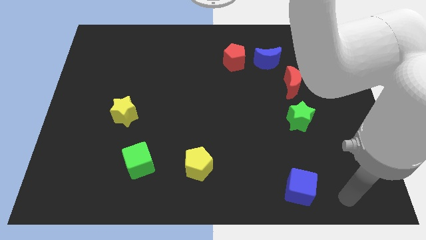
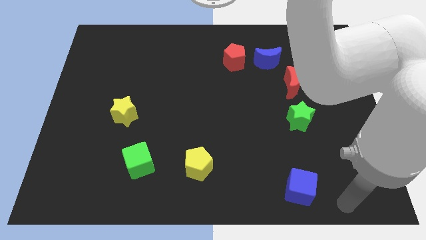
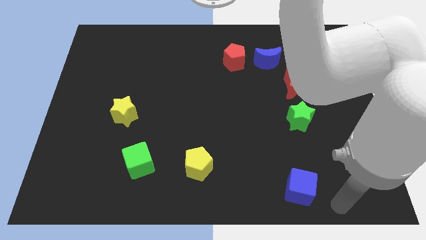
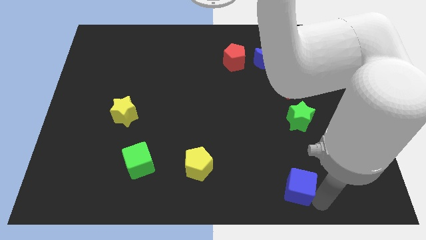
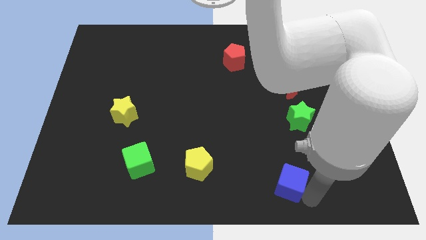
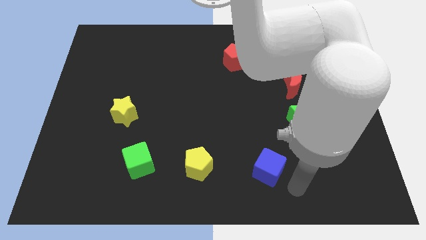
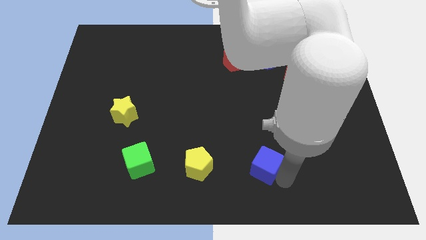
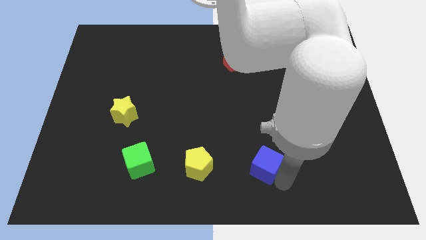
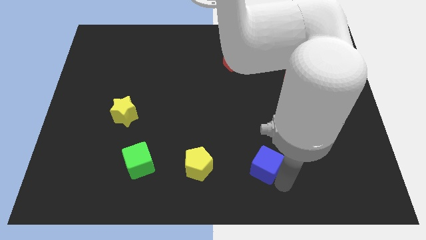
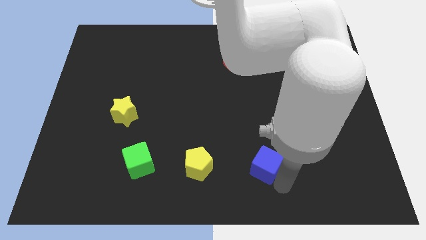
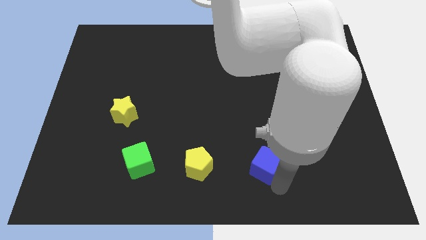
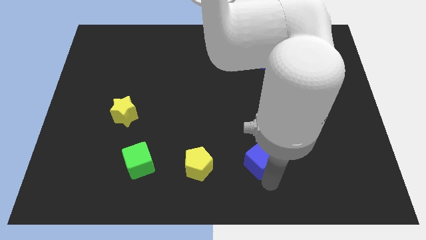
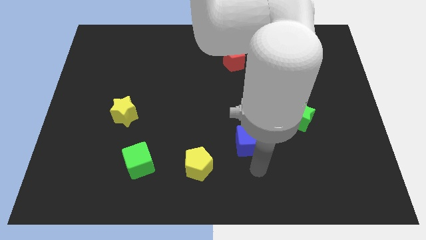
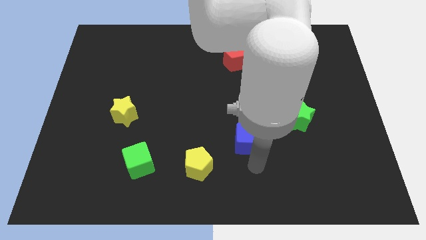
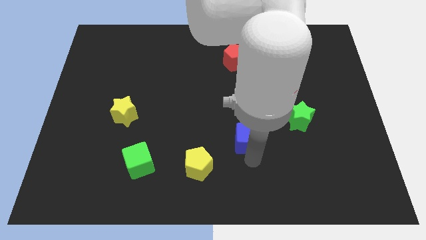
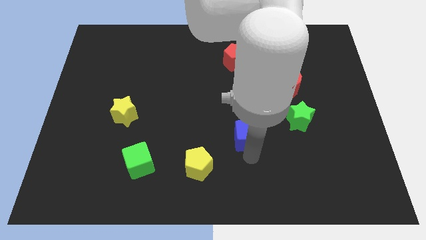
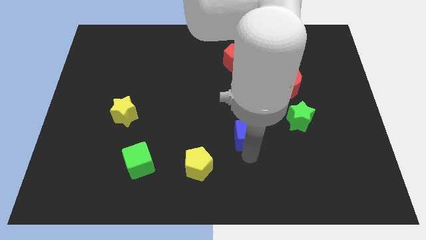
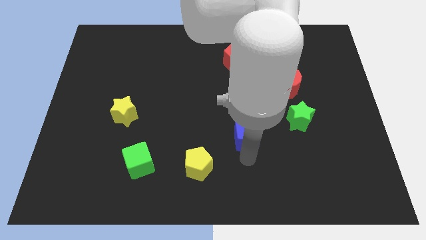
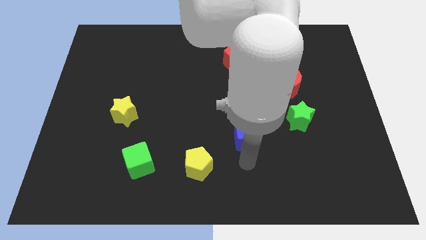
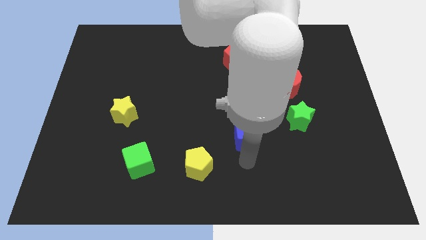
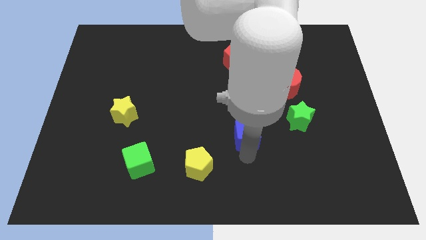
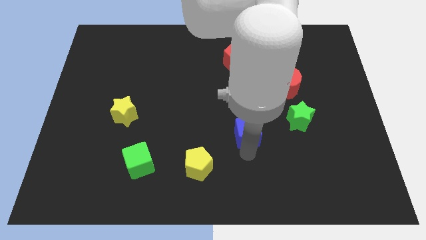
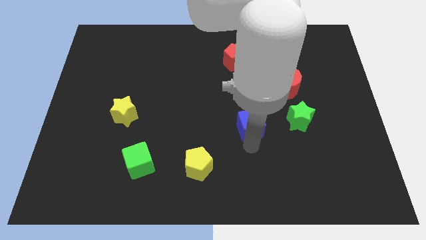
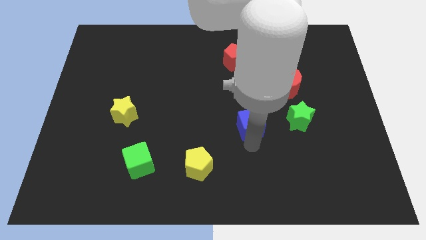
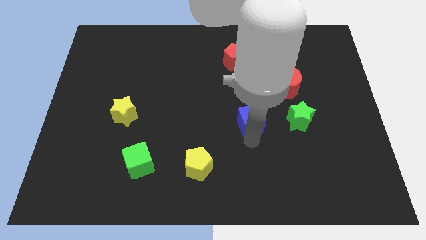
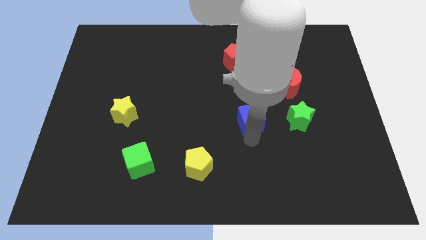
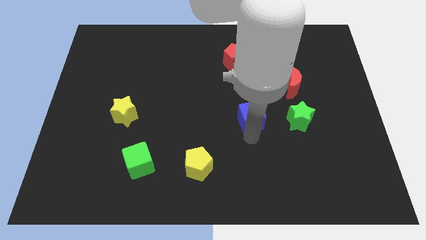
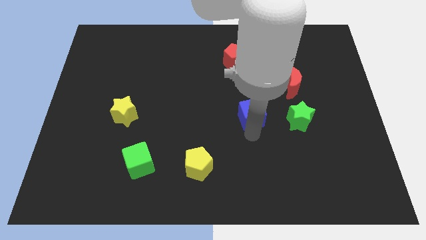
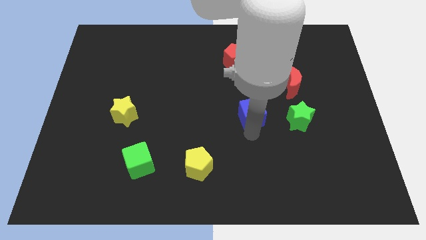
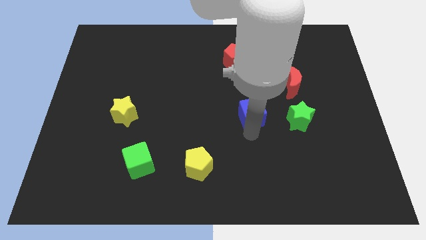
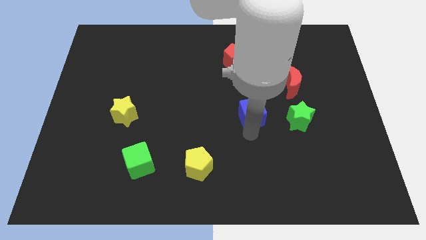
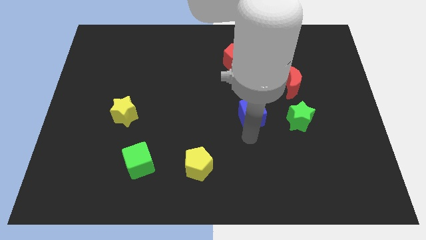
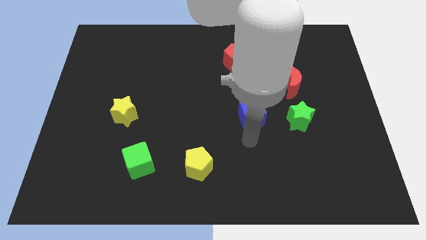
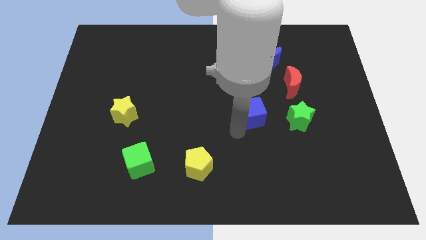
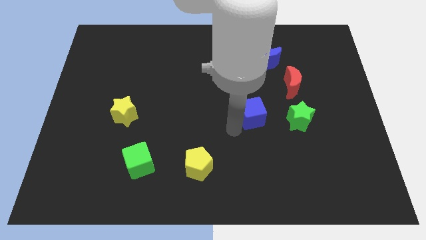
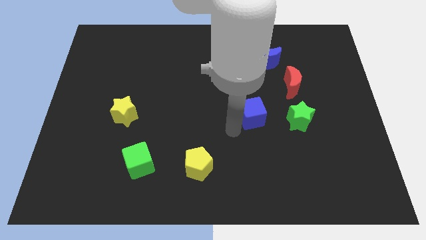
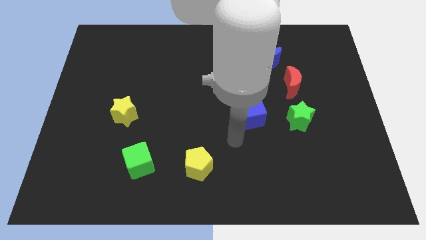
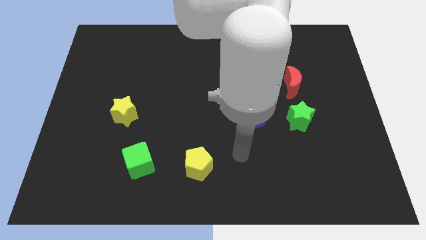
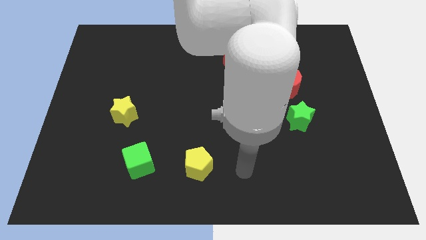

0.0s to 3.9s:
place the blue cube left to the green star

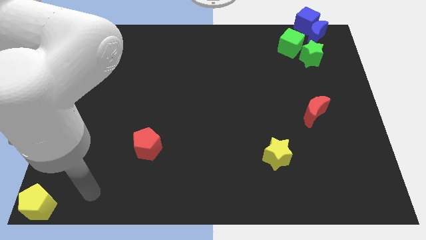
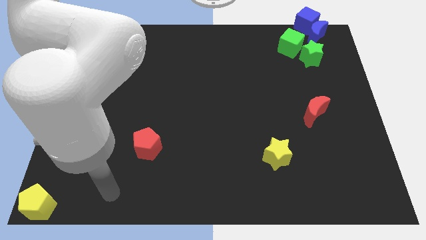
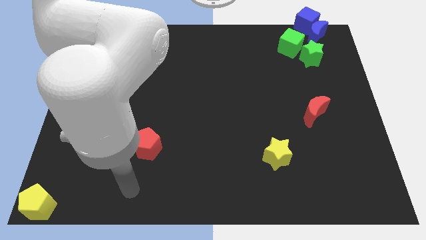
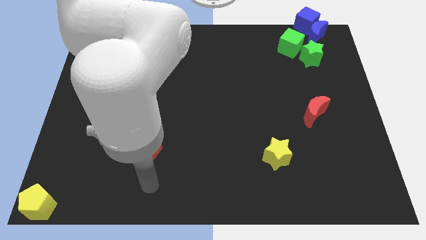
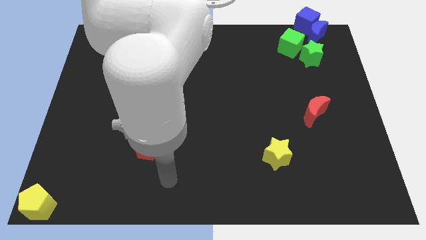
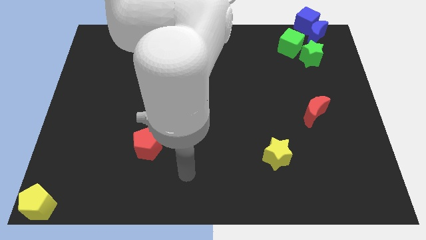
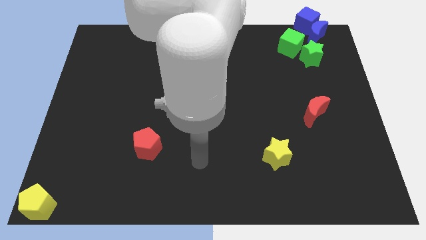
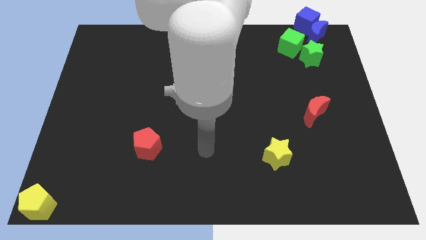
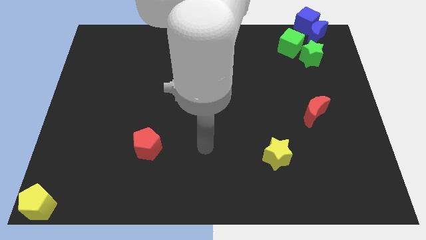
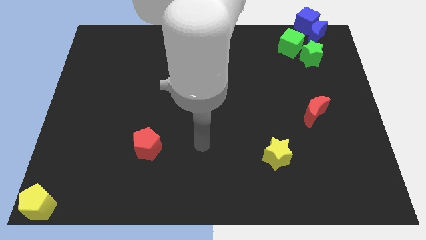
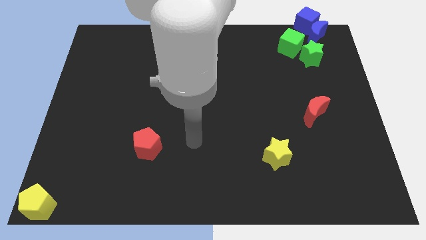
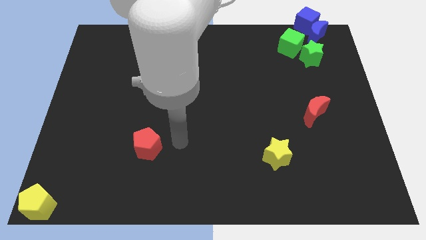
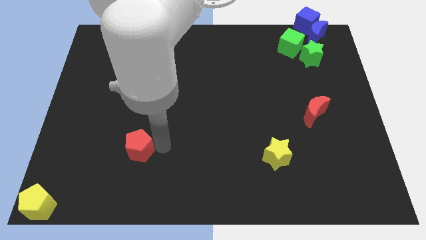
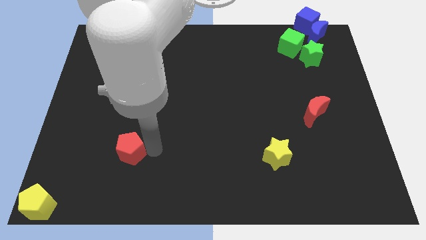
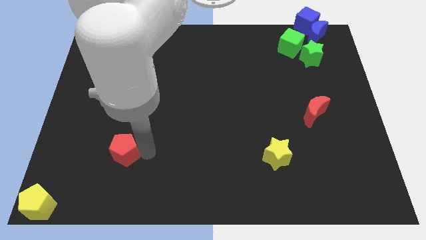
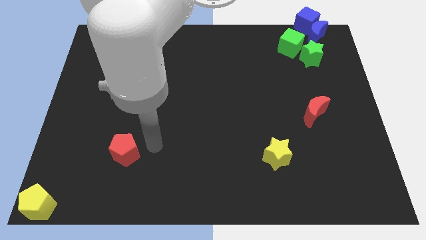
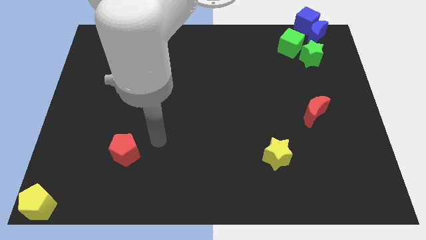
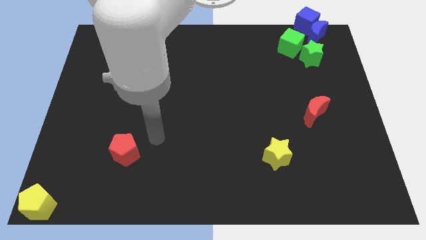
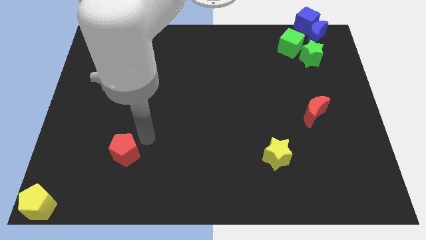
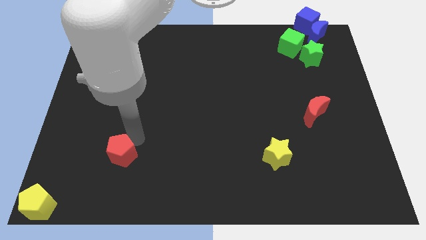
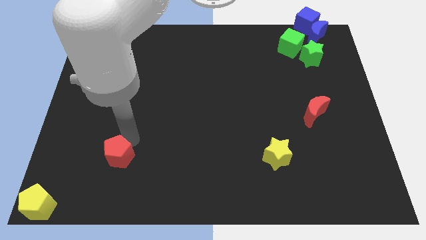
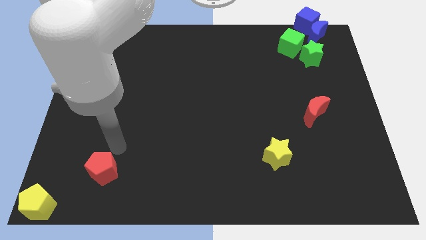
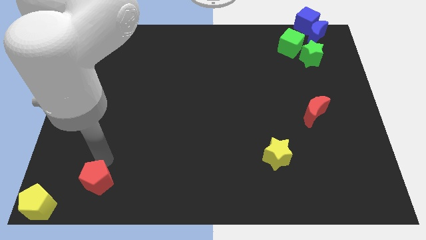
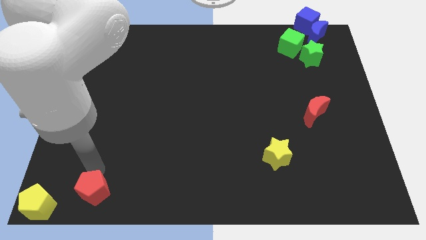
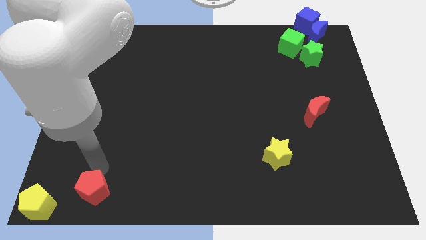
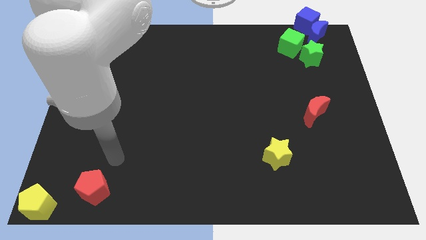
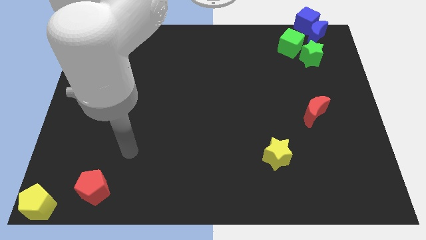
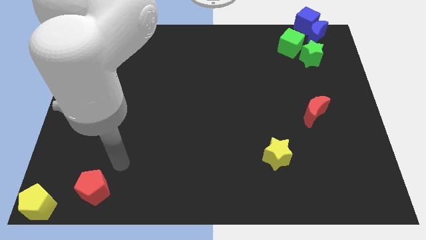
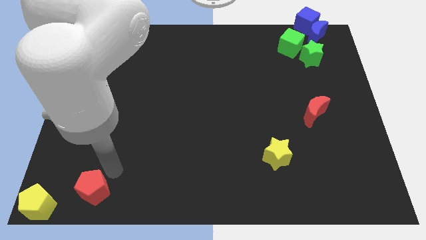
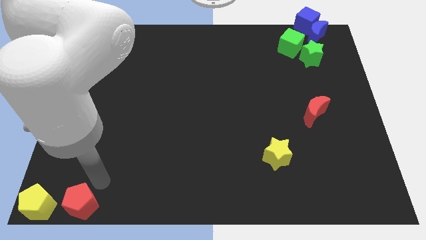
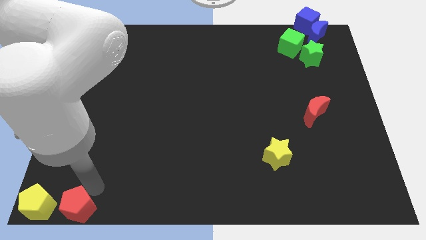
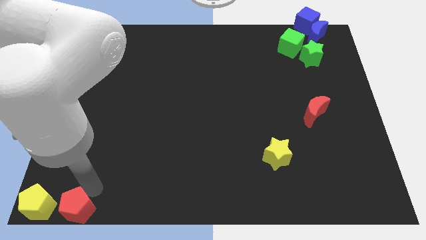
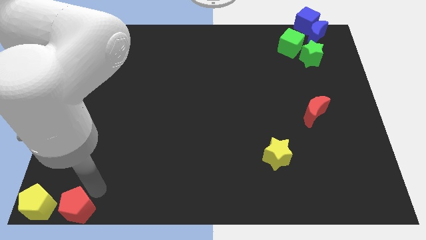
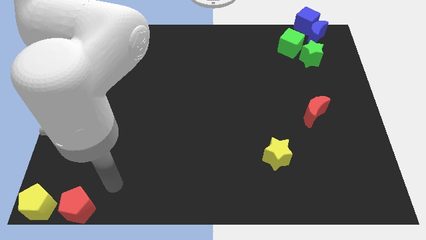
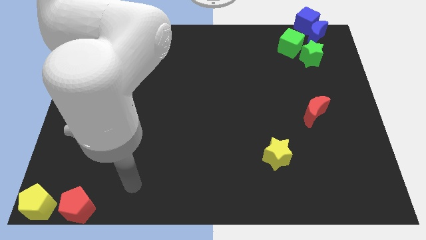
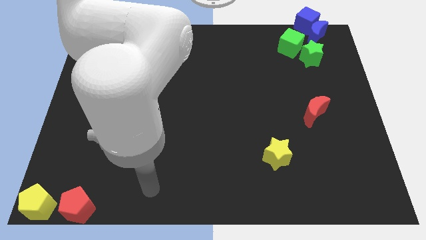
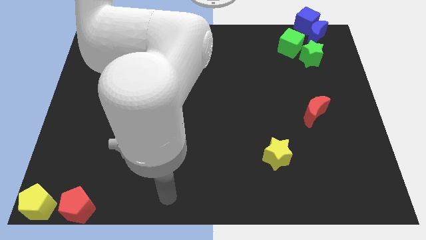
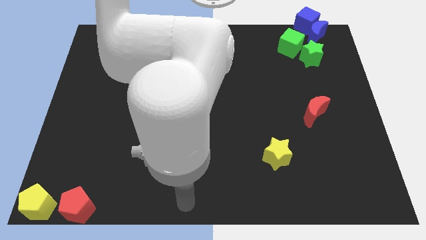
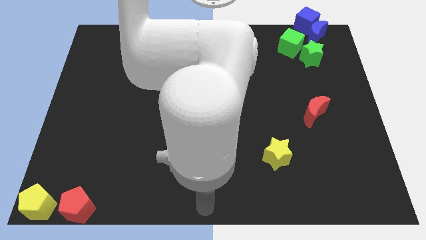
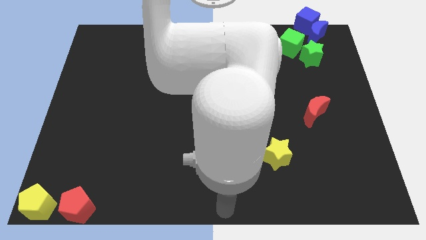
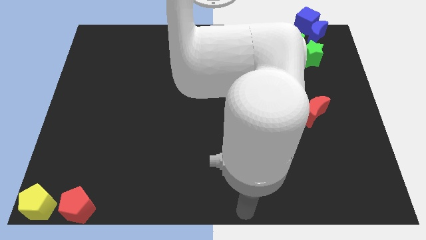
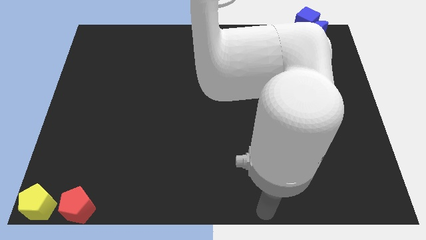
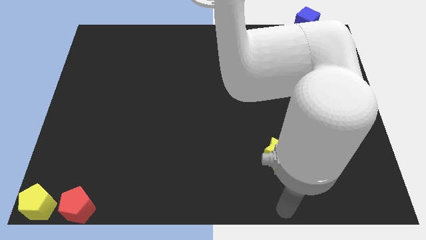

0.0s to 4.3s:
place red pentagon right to the yellow pentagon

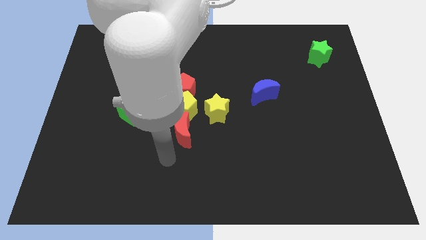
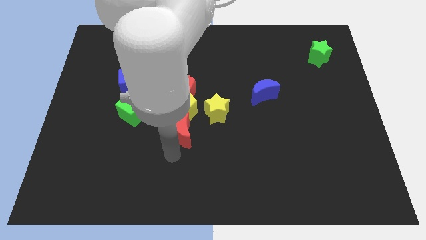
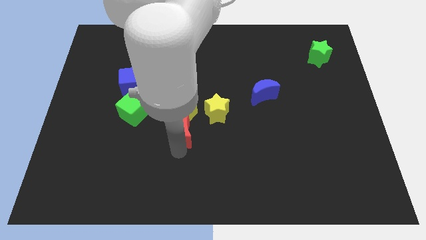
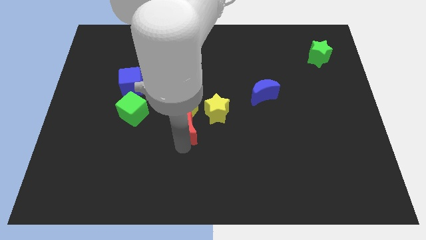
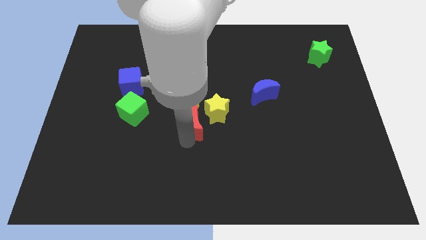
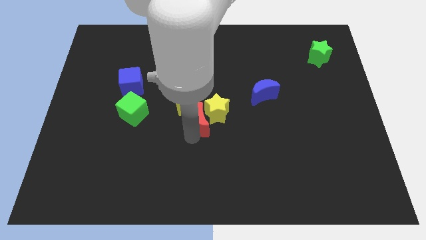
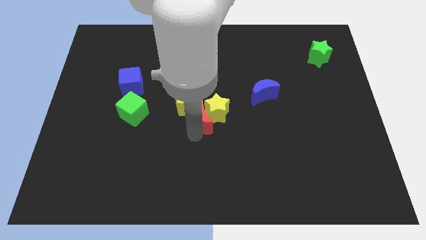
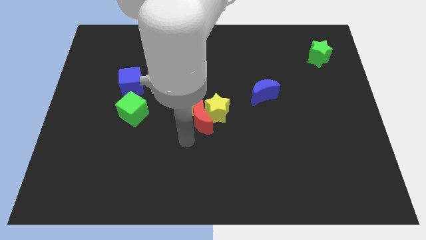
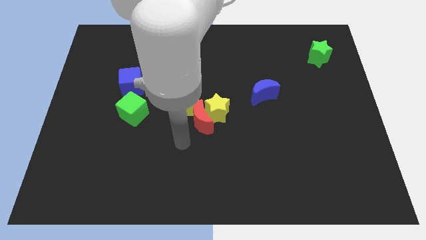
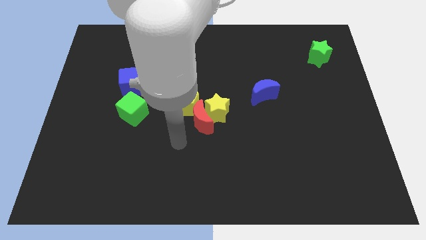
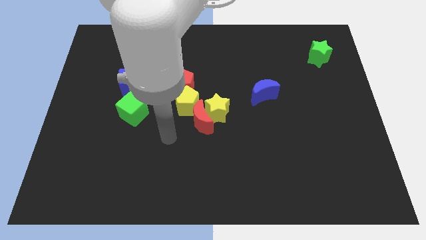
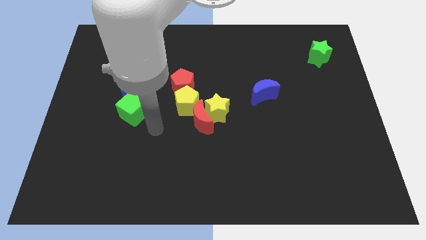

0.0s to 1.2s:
push the red crescent into the yellow star
